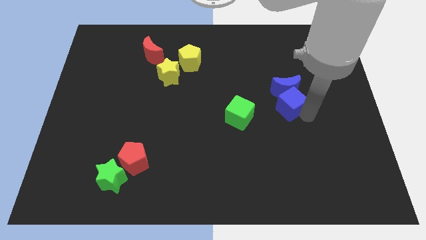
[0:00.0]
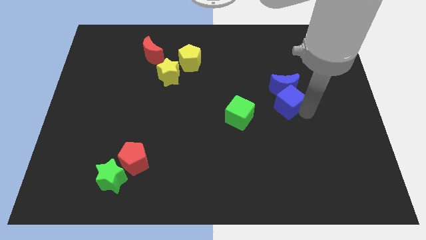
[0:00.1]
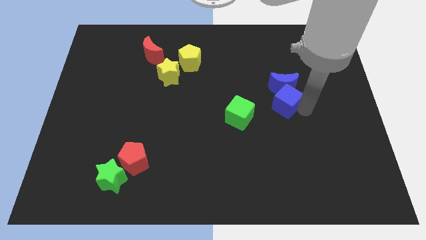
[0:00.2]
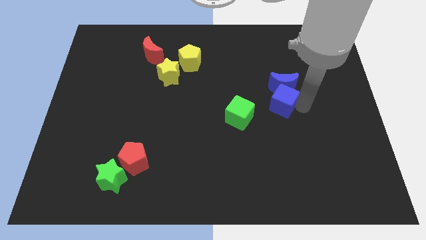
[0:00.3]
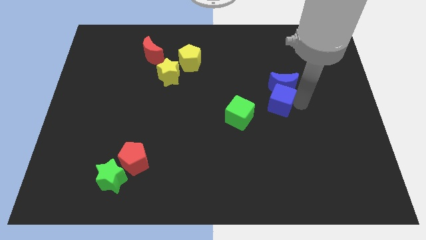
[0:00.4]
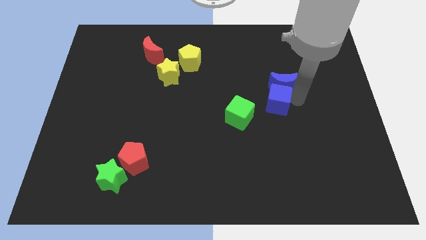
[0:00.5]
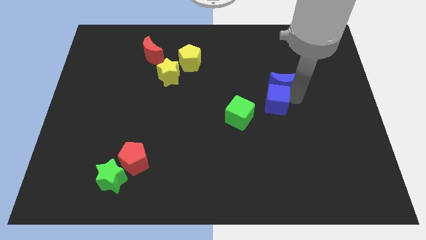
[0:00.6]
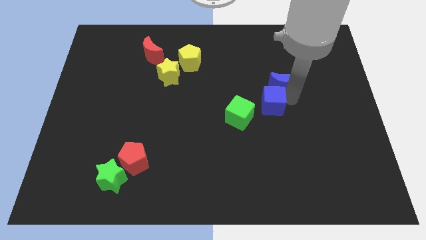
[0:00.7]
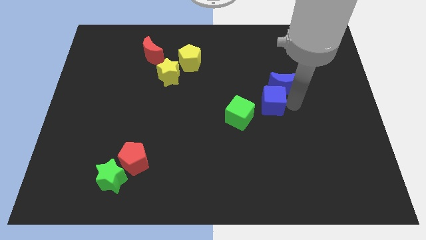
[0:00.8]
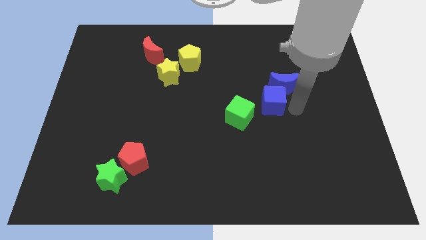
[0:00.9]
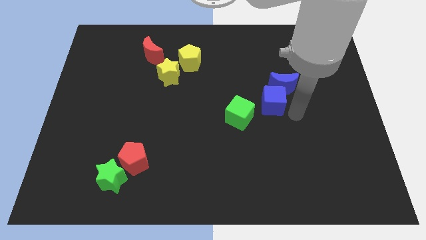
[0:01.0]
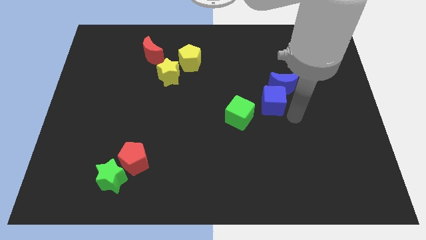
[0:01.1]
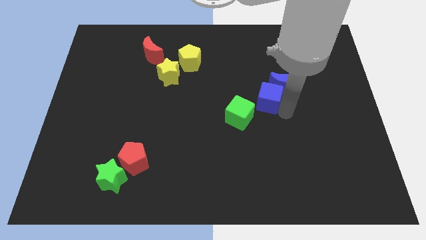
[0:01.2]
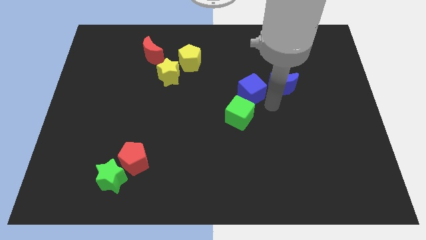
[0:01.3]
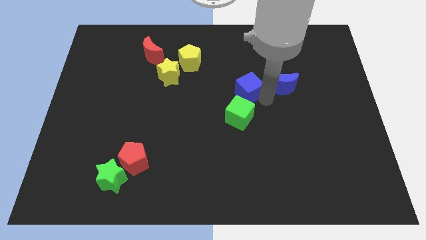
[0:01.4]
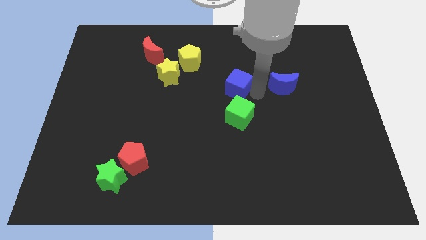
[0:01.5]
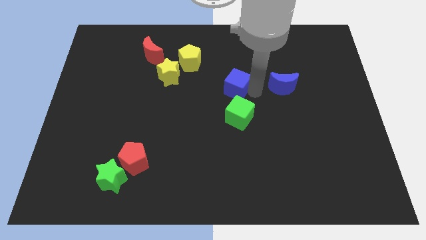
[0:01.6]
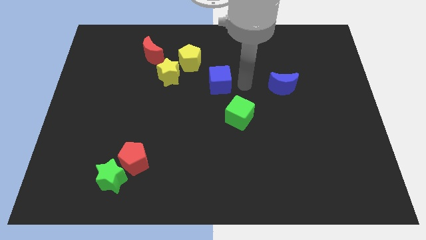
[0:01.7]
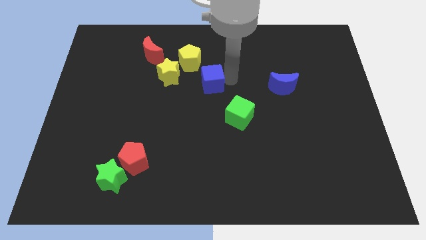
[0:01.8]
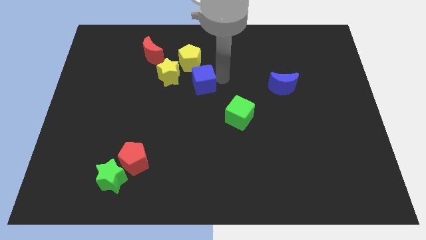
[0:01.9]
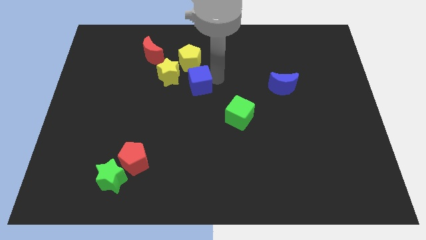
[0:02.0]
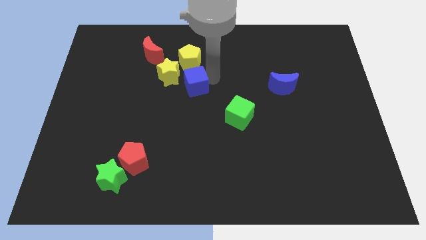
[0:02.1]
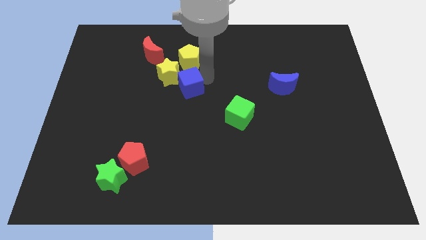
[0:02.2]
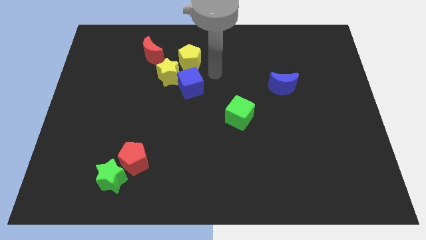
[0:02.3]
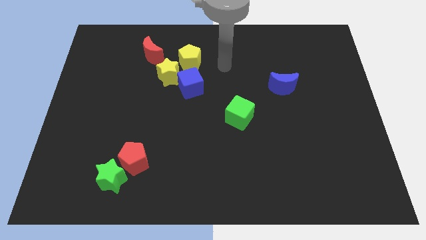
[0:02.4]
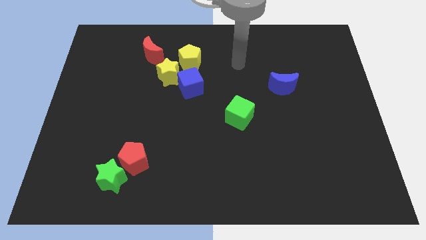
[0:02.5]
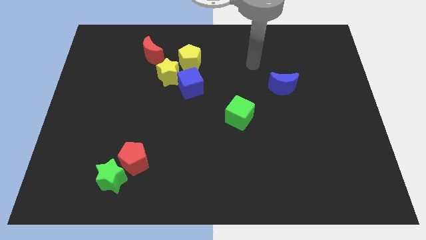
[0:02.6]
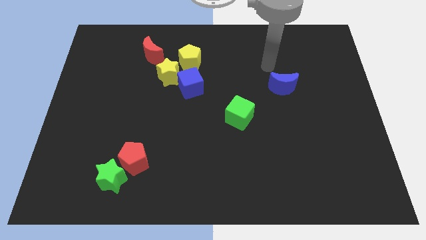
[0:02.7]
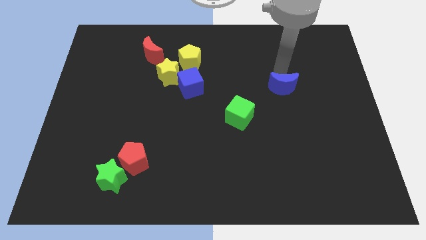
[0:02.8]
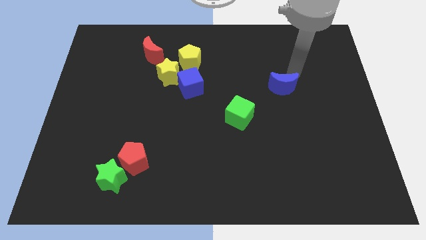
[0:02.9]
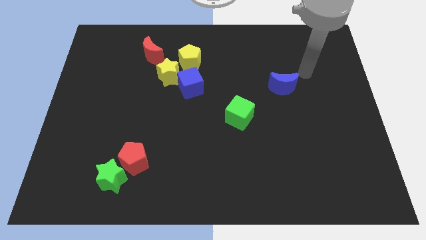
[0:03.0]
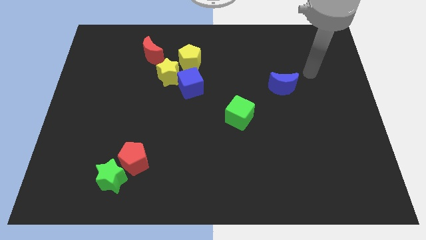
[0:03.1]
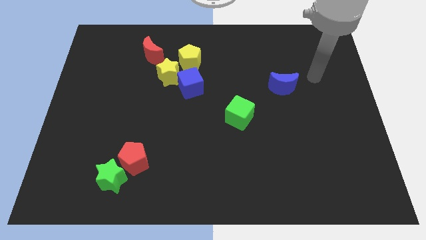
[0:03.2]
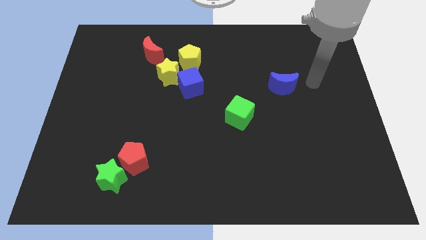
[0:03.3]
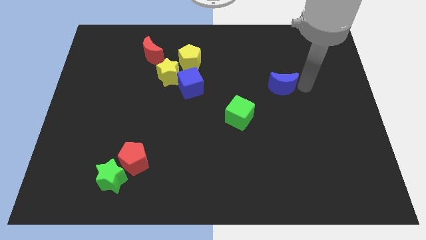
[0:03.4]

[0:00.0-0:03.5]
place the blue cube below to the yellow pentagon

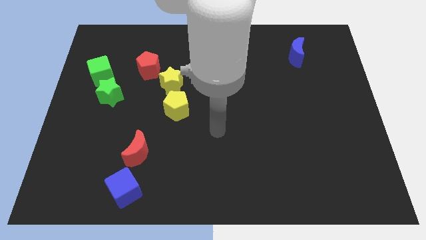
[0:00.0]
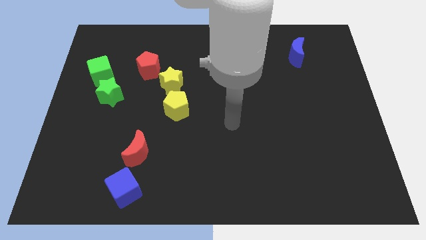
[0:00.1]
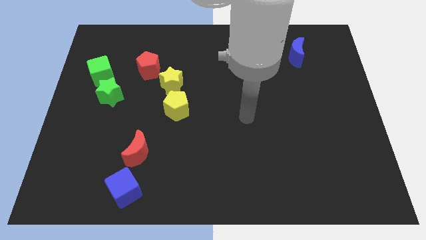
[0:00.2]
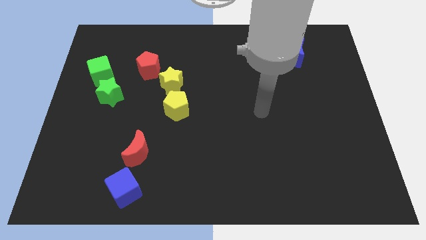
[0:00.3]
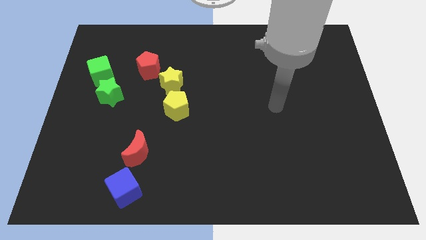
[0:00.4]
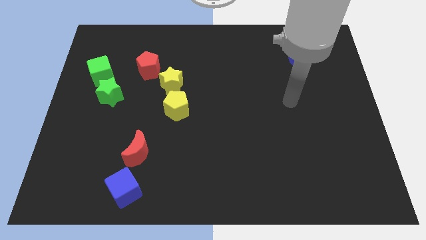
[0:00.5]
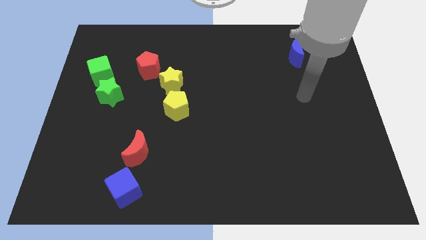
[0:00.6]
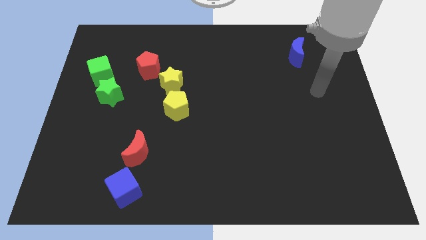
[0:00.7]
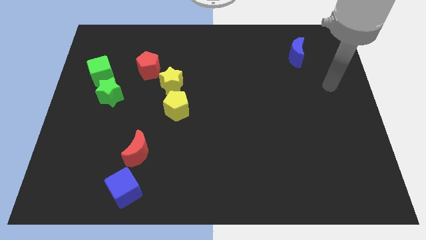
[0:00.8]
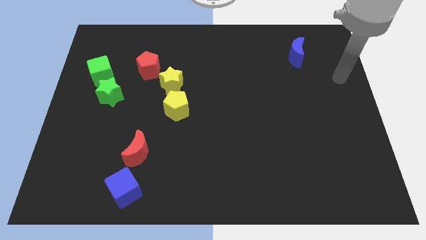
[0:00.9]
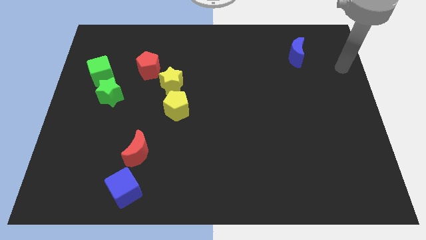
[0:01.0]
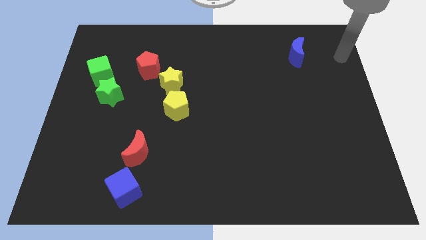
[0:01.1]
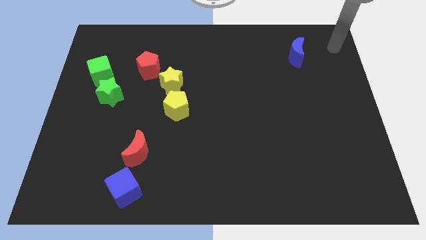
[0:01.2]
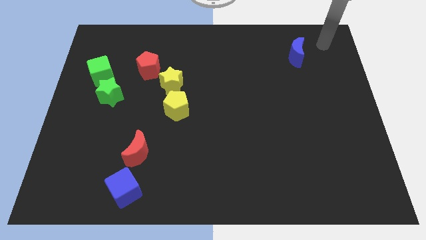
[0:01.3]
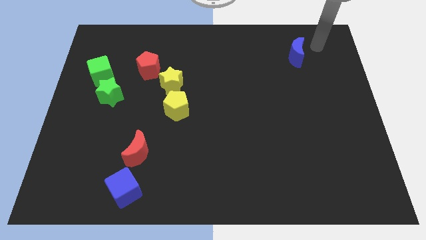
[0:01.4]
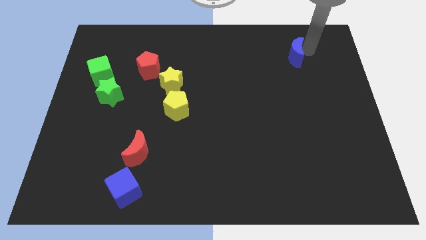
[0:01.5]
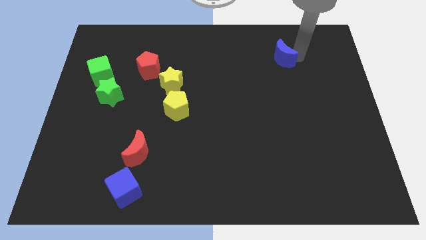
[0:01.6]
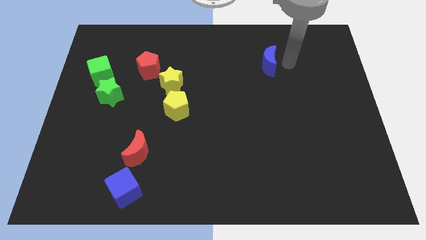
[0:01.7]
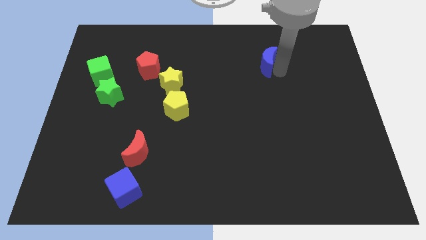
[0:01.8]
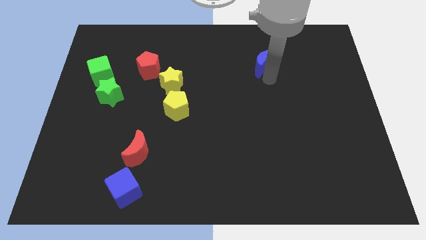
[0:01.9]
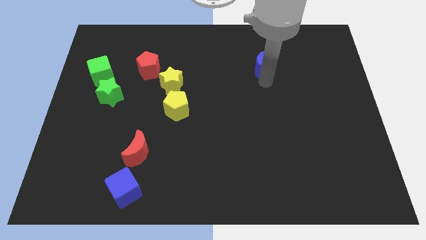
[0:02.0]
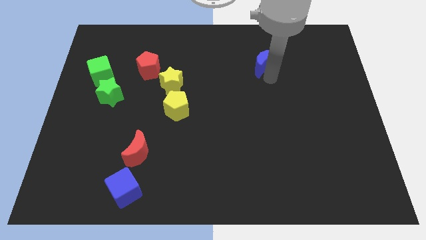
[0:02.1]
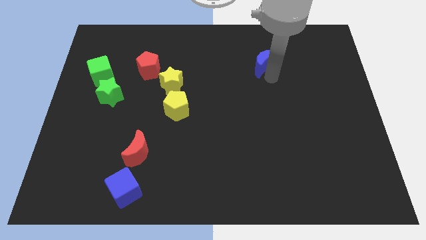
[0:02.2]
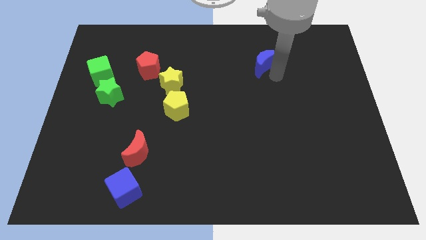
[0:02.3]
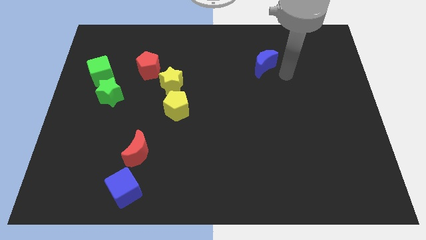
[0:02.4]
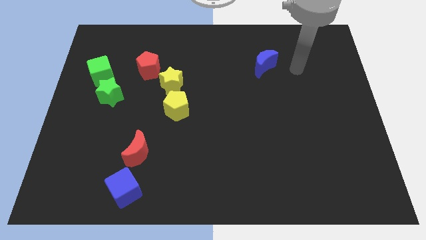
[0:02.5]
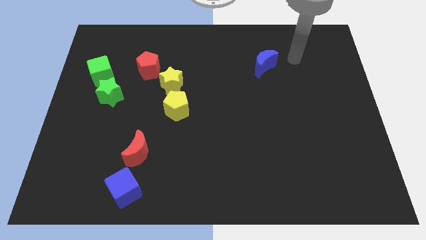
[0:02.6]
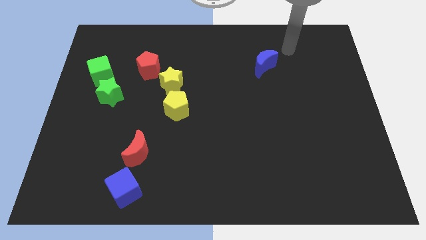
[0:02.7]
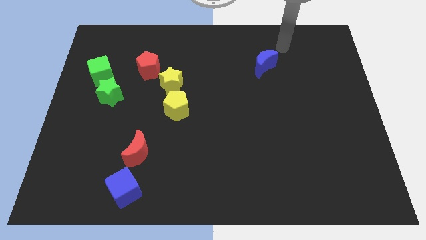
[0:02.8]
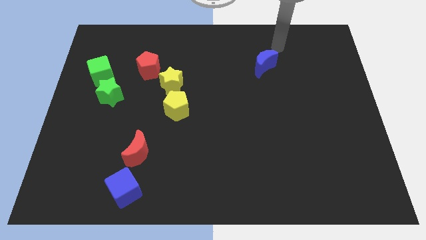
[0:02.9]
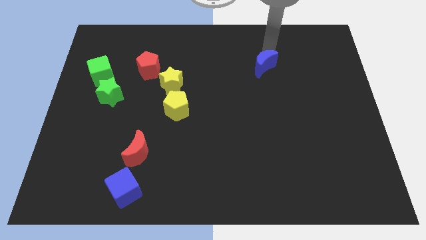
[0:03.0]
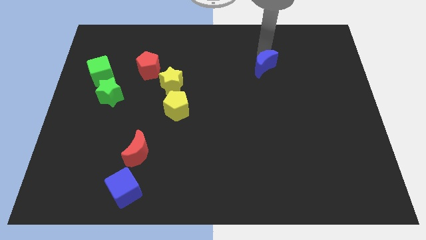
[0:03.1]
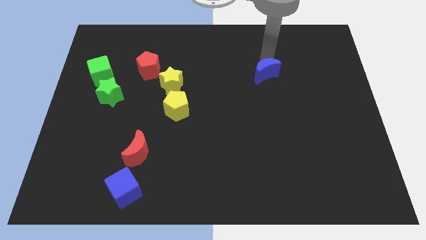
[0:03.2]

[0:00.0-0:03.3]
move blue moon to the center

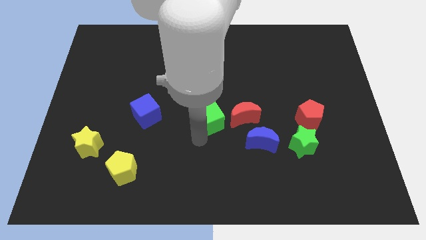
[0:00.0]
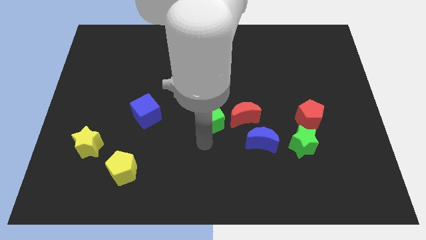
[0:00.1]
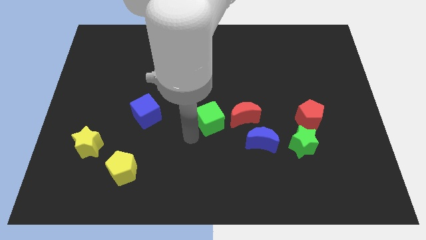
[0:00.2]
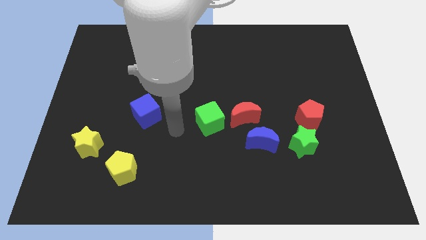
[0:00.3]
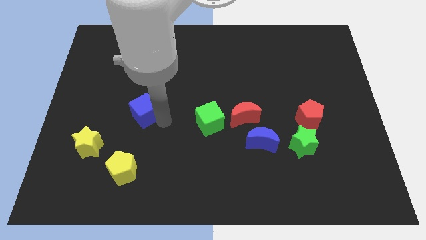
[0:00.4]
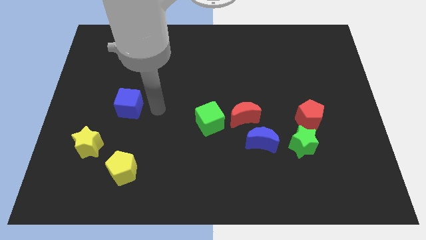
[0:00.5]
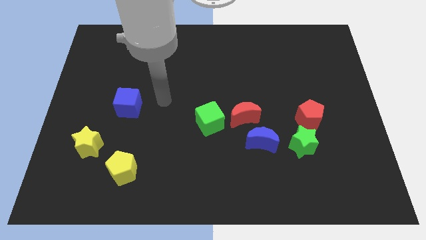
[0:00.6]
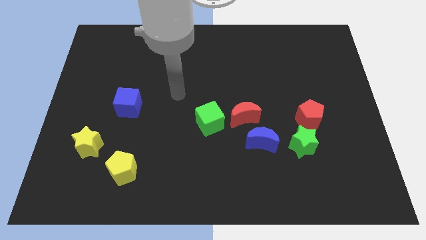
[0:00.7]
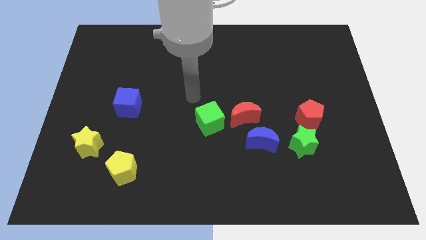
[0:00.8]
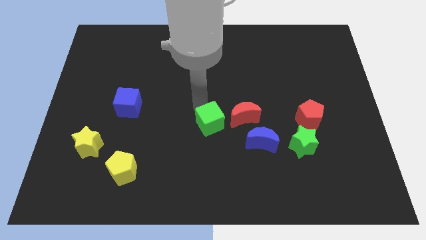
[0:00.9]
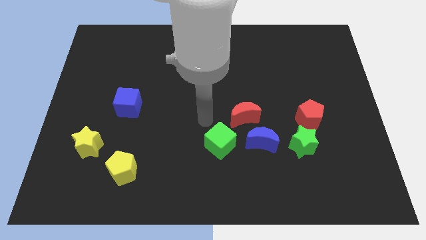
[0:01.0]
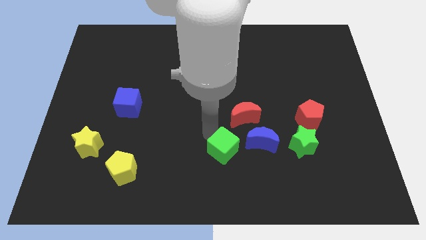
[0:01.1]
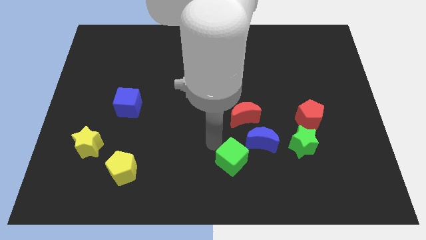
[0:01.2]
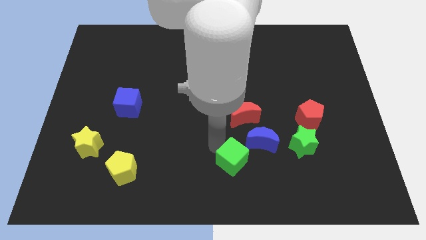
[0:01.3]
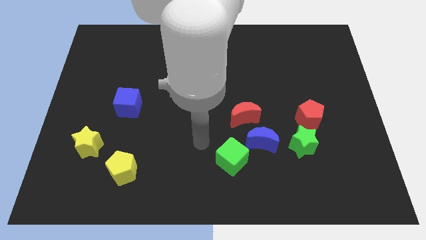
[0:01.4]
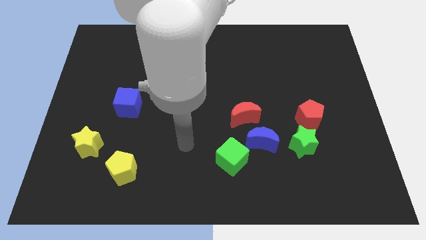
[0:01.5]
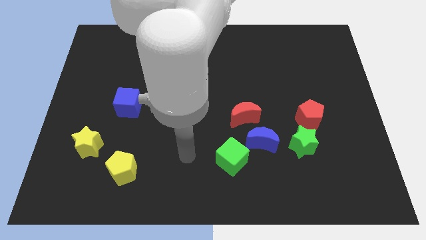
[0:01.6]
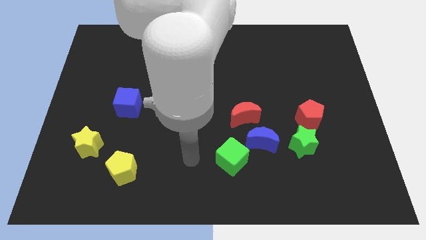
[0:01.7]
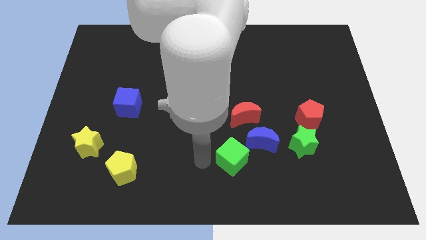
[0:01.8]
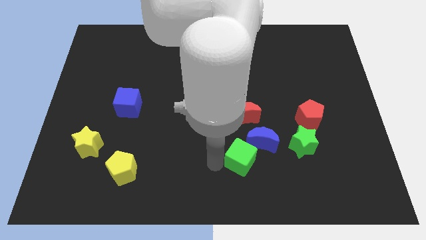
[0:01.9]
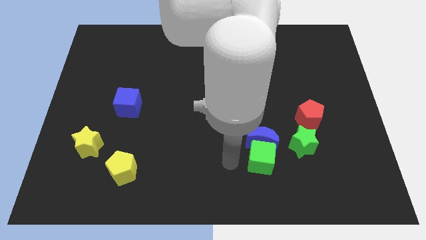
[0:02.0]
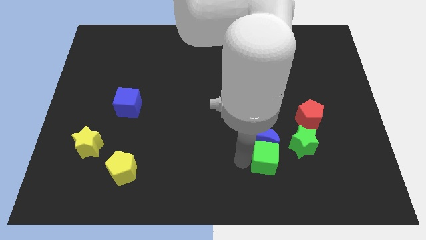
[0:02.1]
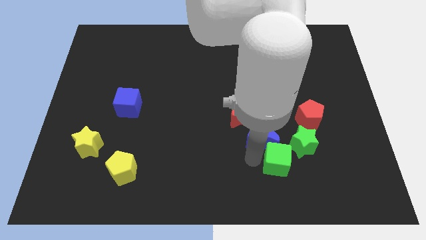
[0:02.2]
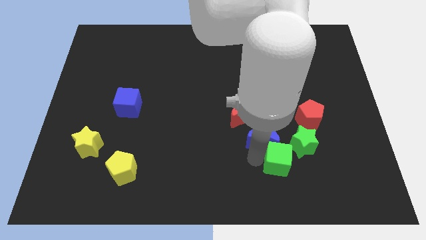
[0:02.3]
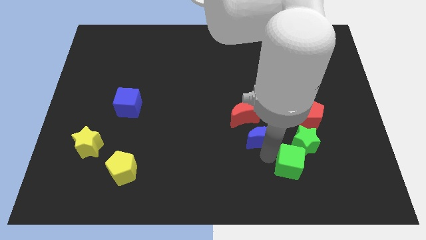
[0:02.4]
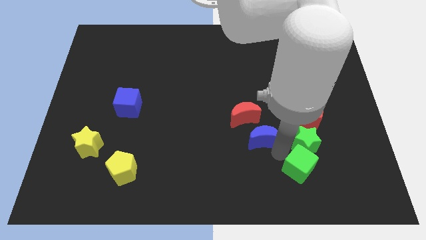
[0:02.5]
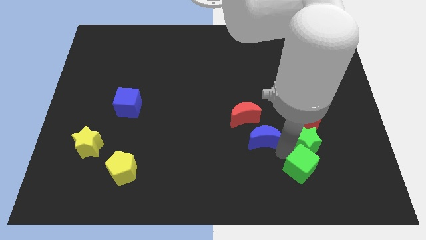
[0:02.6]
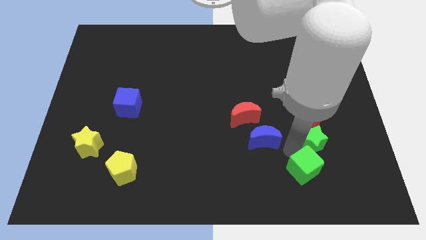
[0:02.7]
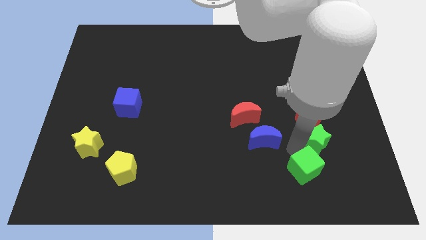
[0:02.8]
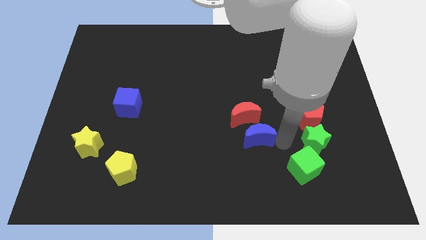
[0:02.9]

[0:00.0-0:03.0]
push the green cube below green star
